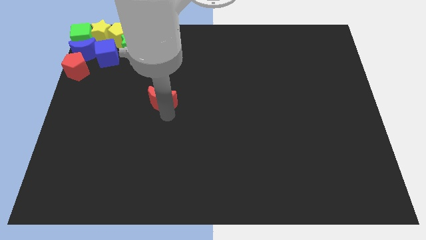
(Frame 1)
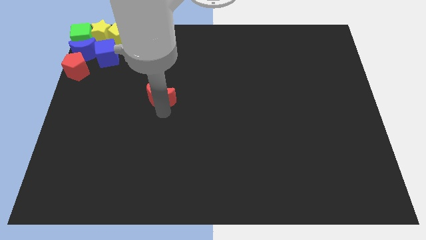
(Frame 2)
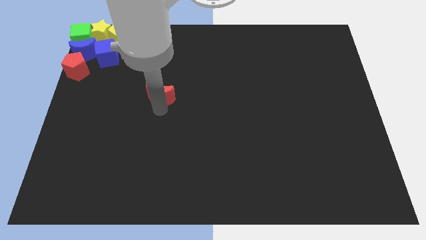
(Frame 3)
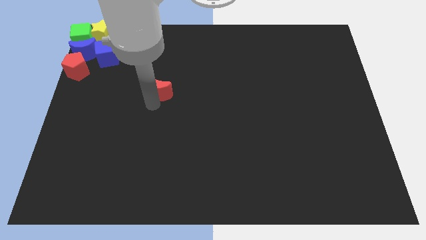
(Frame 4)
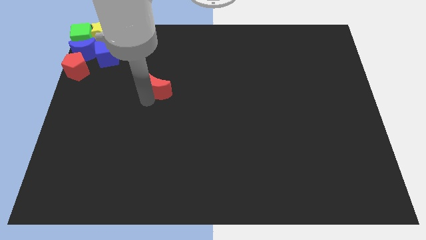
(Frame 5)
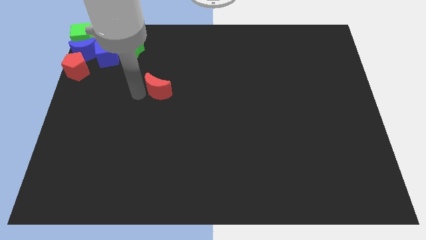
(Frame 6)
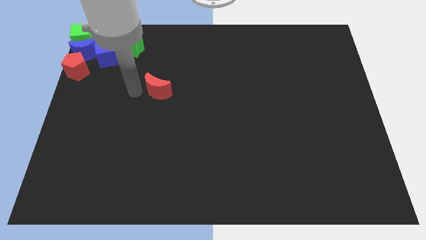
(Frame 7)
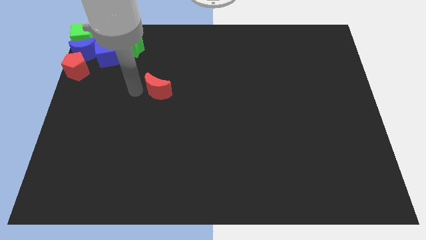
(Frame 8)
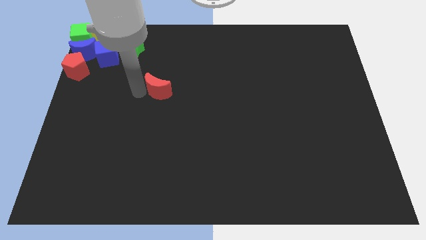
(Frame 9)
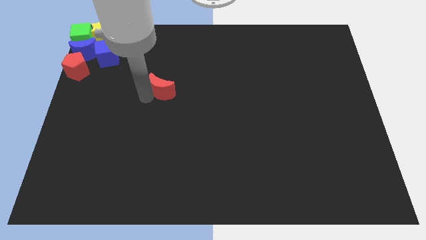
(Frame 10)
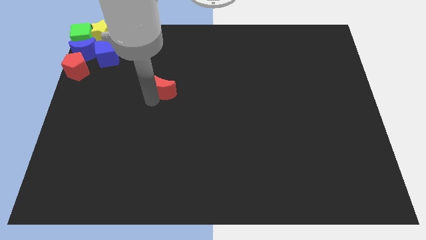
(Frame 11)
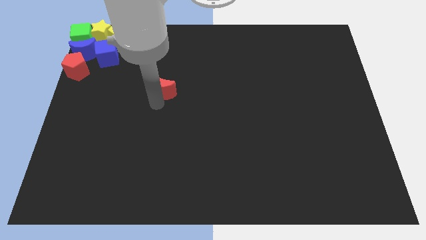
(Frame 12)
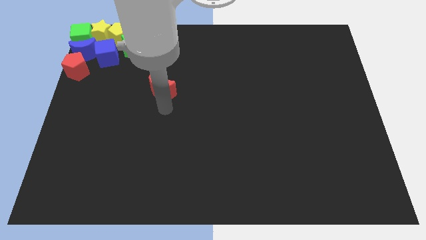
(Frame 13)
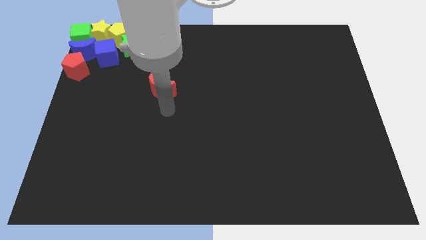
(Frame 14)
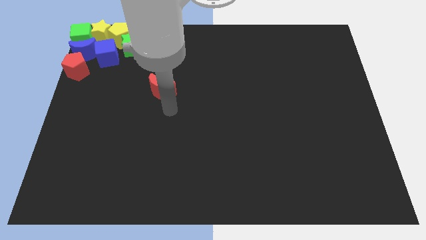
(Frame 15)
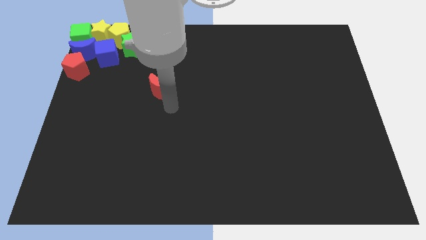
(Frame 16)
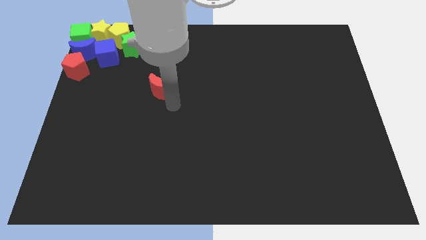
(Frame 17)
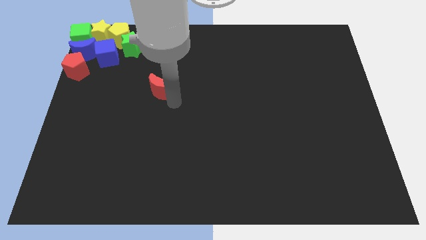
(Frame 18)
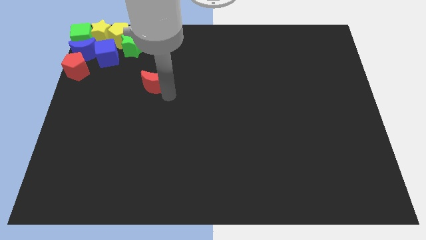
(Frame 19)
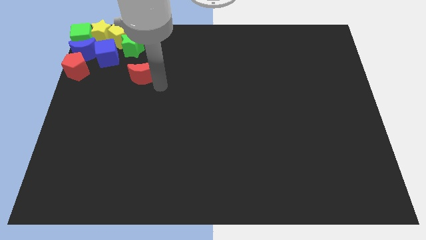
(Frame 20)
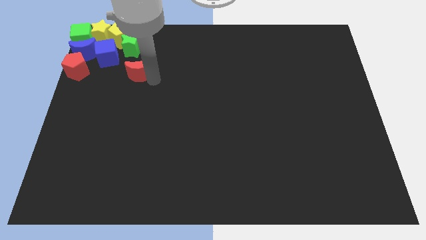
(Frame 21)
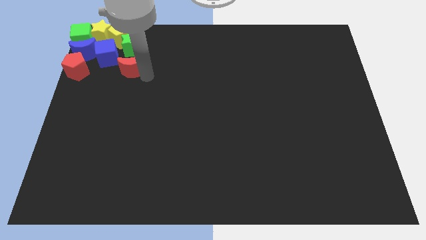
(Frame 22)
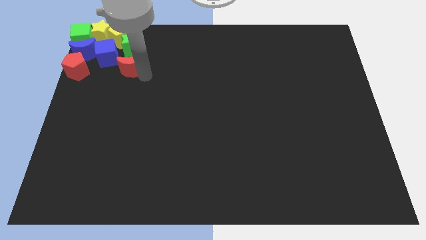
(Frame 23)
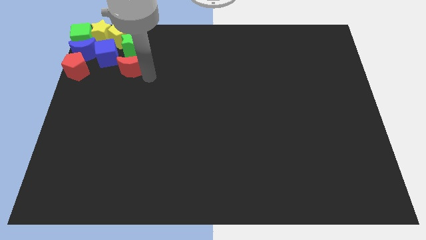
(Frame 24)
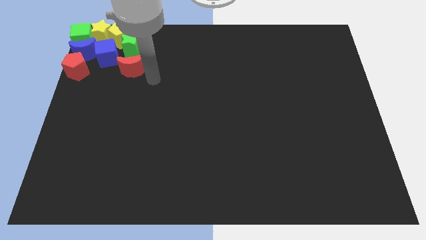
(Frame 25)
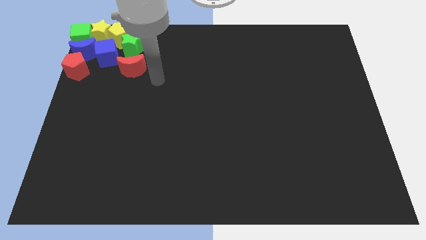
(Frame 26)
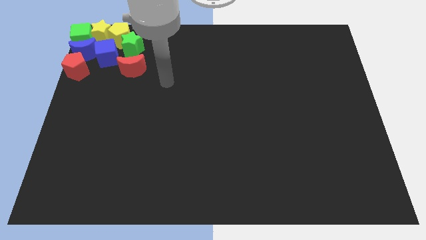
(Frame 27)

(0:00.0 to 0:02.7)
push the red crescent under the green star

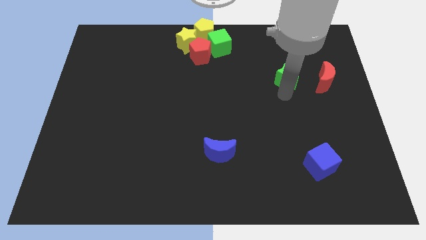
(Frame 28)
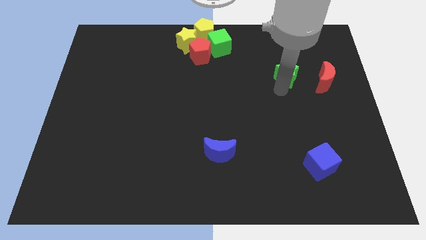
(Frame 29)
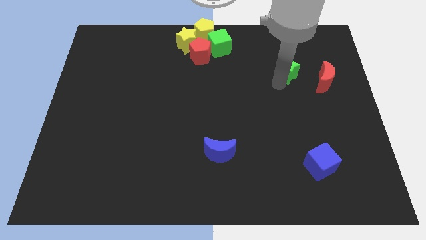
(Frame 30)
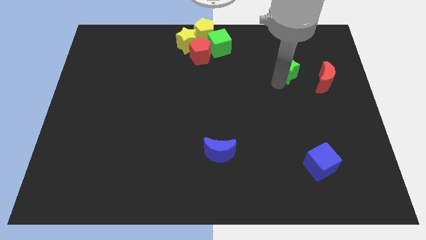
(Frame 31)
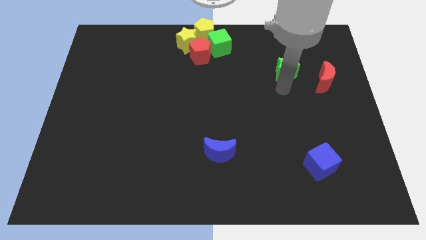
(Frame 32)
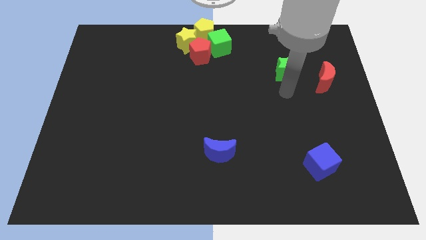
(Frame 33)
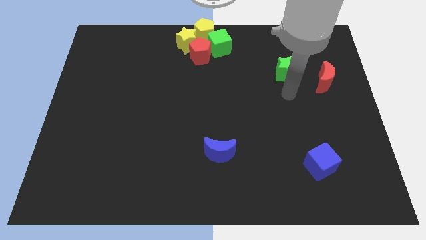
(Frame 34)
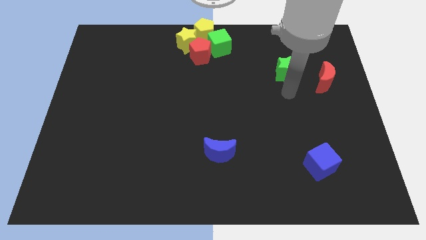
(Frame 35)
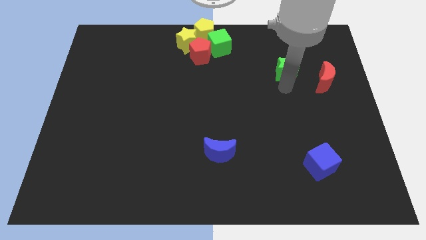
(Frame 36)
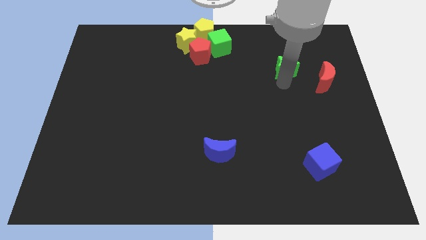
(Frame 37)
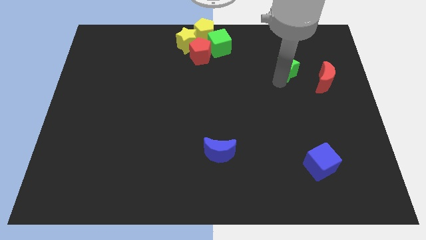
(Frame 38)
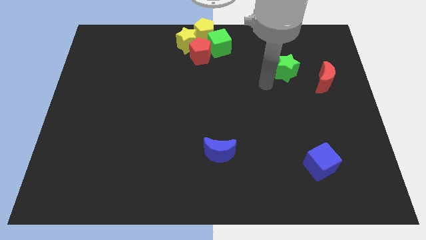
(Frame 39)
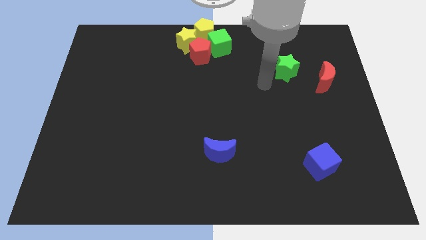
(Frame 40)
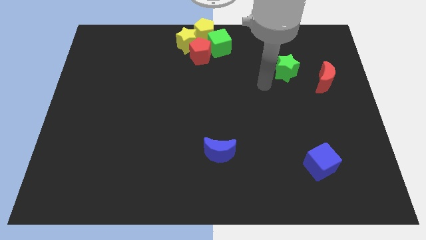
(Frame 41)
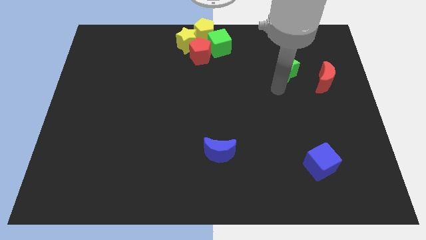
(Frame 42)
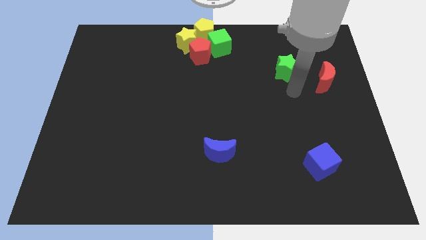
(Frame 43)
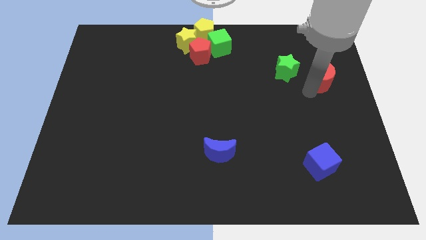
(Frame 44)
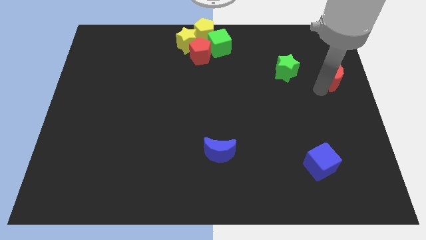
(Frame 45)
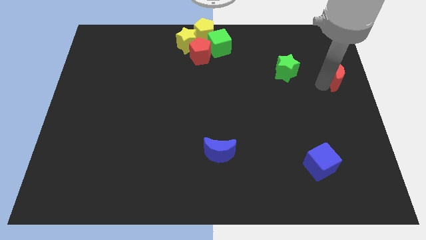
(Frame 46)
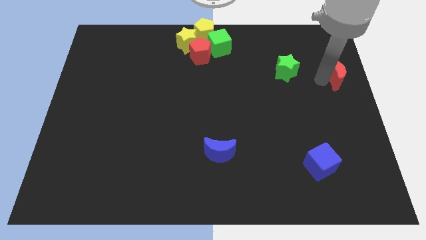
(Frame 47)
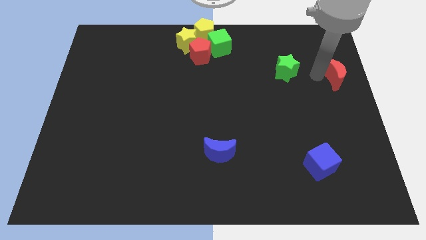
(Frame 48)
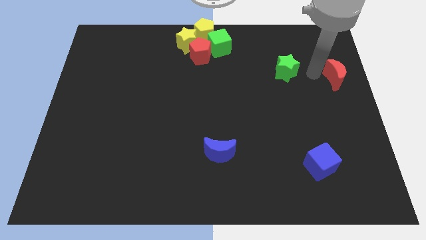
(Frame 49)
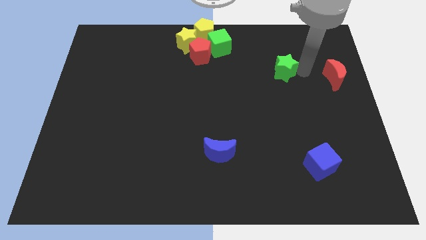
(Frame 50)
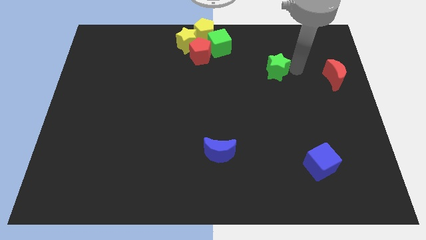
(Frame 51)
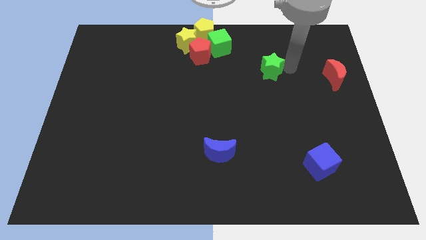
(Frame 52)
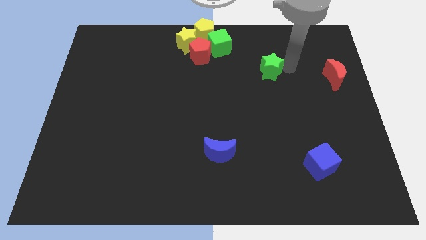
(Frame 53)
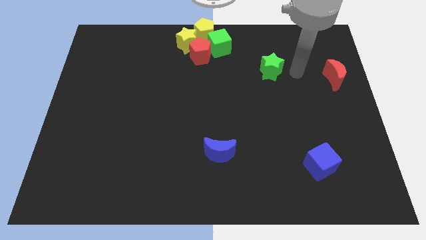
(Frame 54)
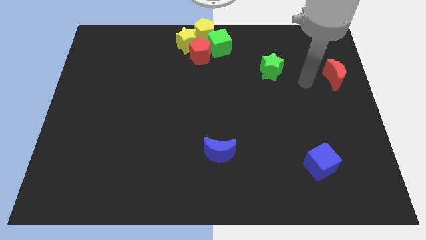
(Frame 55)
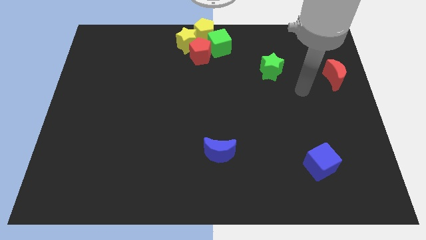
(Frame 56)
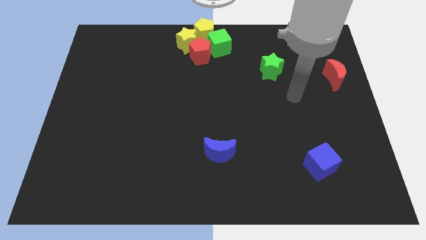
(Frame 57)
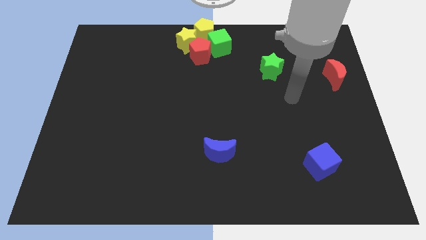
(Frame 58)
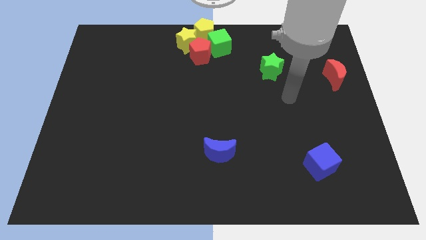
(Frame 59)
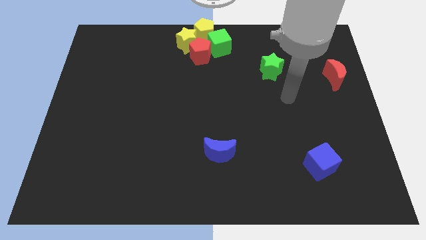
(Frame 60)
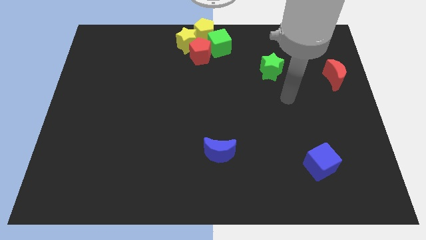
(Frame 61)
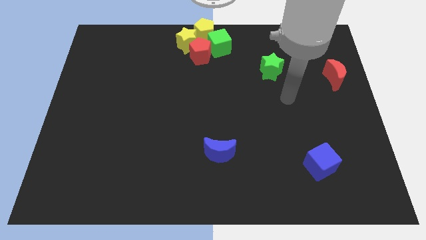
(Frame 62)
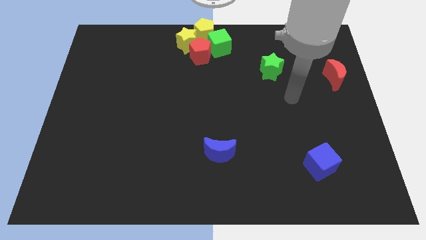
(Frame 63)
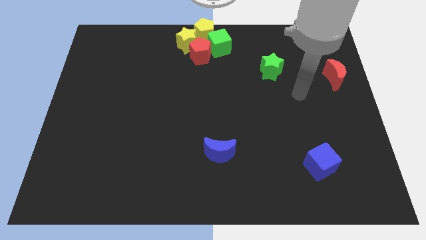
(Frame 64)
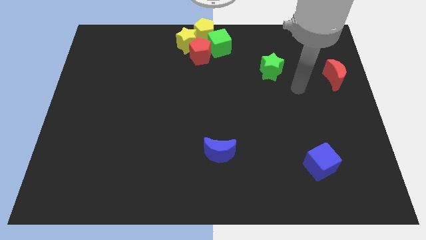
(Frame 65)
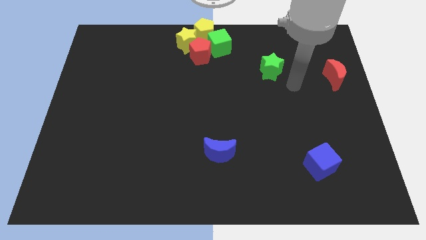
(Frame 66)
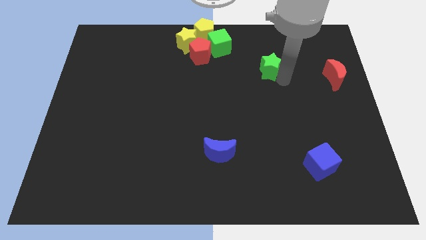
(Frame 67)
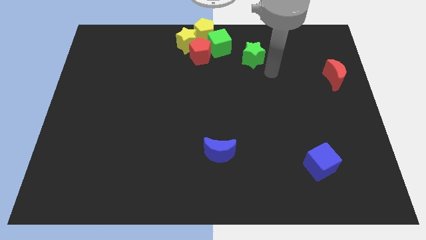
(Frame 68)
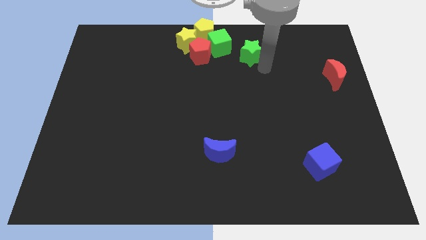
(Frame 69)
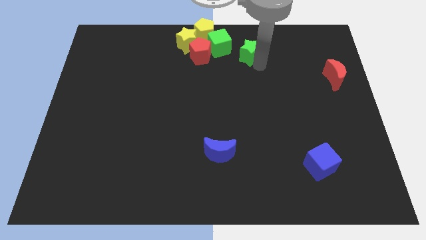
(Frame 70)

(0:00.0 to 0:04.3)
move green star towards green cube

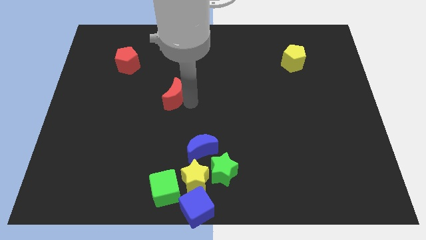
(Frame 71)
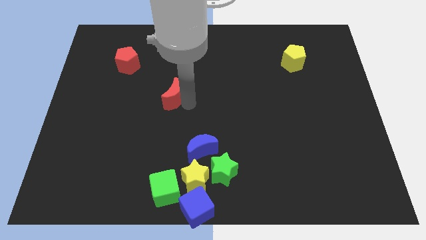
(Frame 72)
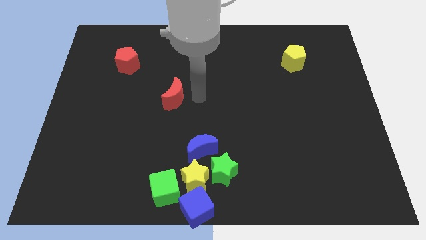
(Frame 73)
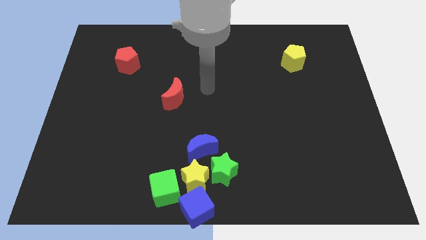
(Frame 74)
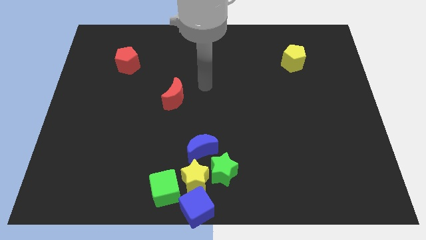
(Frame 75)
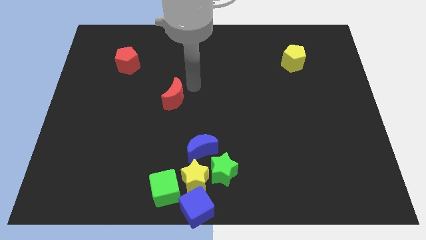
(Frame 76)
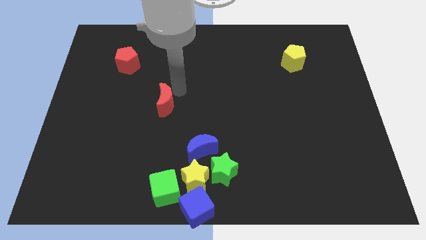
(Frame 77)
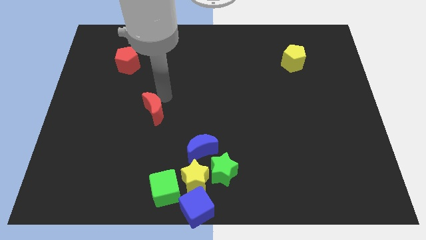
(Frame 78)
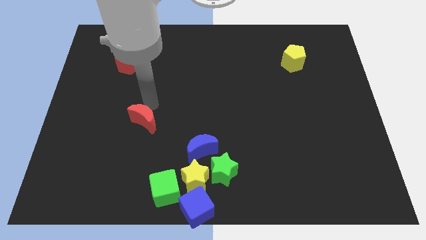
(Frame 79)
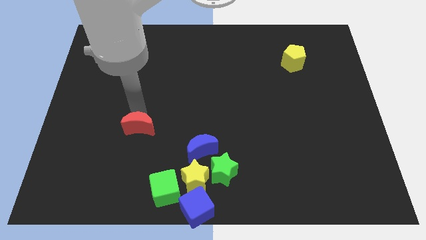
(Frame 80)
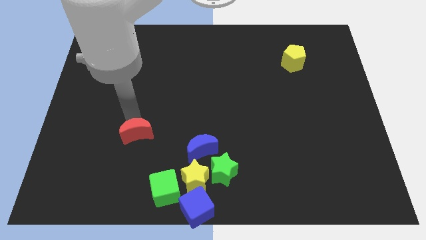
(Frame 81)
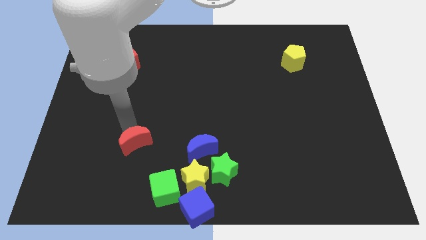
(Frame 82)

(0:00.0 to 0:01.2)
move the red moon diagonally top left to the green cube

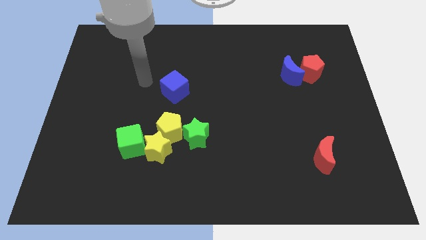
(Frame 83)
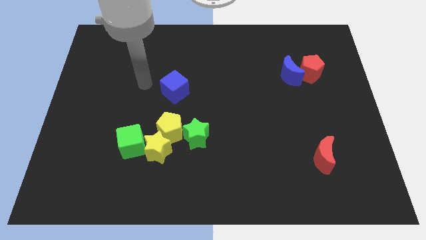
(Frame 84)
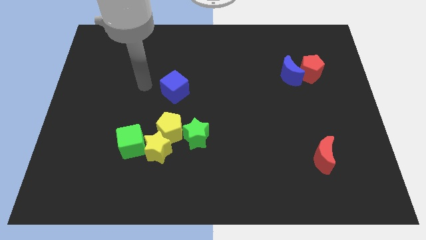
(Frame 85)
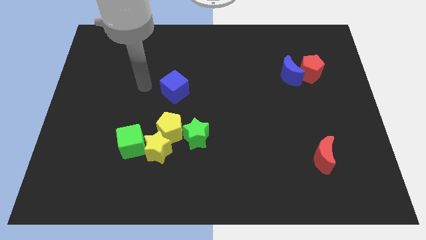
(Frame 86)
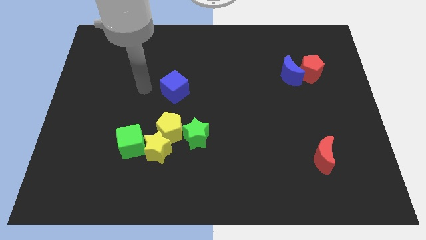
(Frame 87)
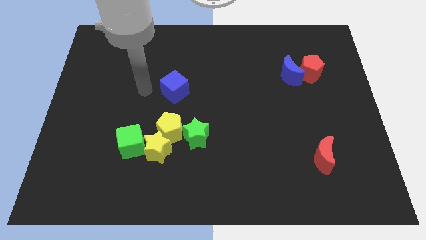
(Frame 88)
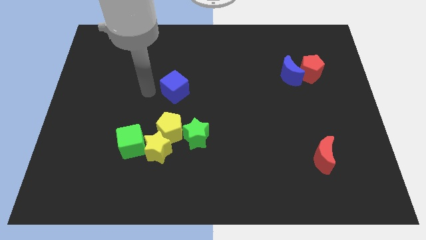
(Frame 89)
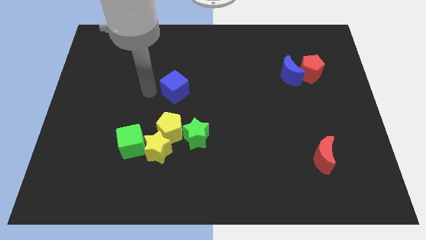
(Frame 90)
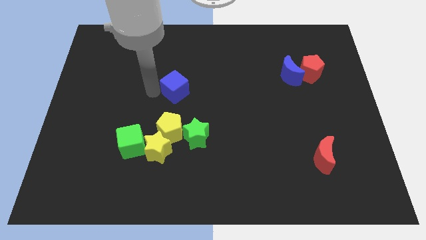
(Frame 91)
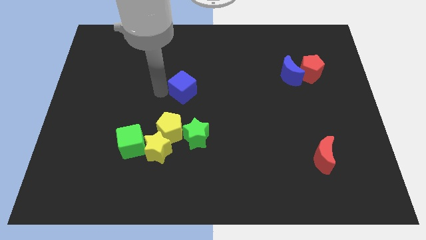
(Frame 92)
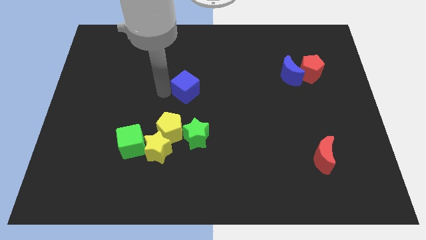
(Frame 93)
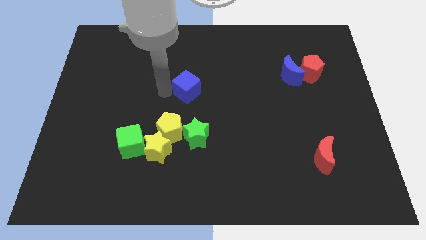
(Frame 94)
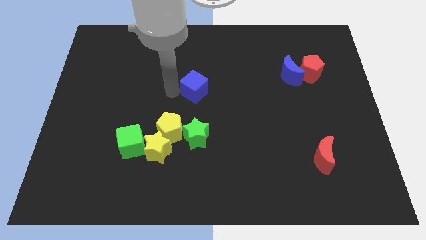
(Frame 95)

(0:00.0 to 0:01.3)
push the blue cube to the top of the green star
